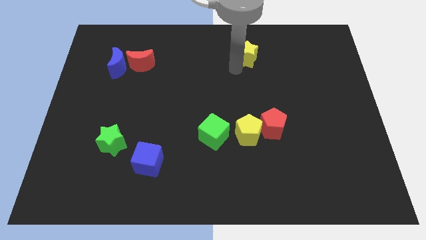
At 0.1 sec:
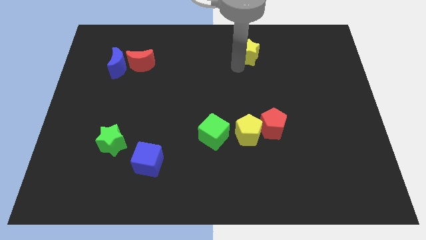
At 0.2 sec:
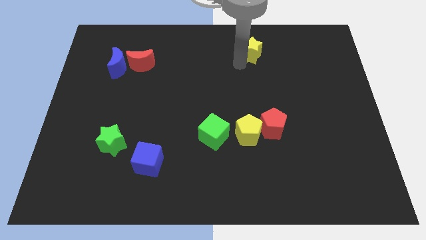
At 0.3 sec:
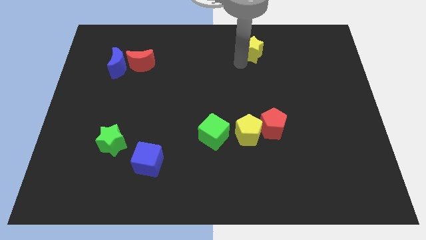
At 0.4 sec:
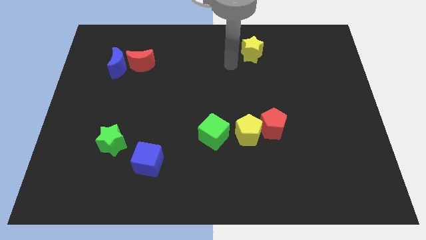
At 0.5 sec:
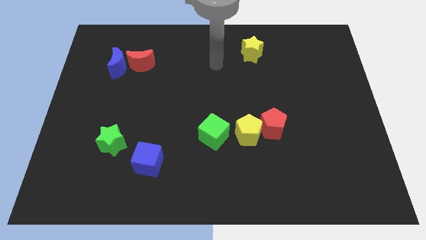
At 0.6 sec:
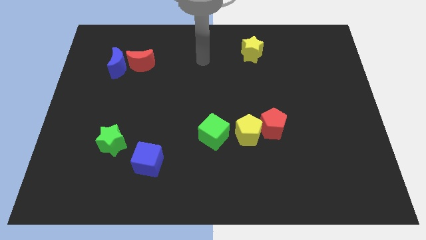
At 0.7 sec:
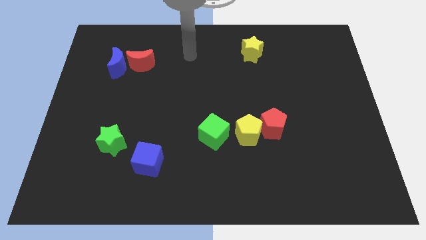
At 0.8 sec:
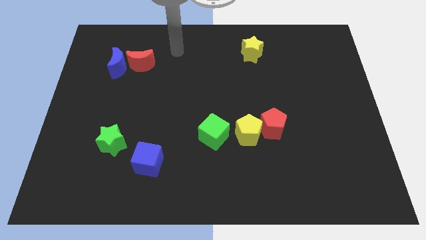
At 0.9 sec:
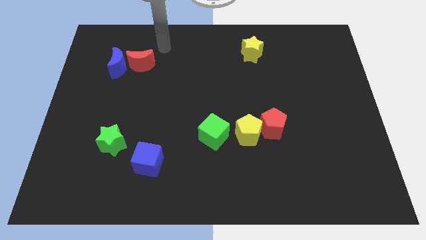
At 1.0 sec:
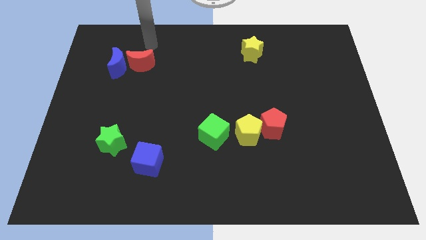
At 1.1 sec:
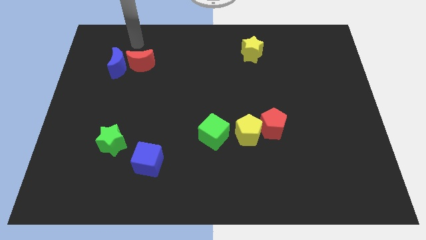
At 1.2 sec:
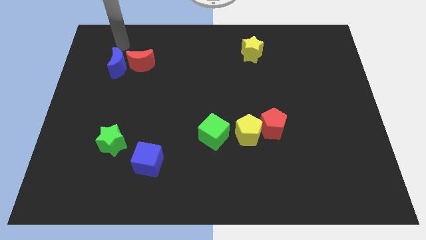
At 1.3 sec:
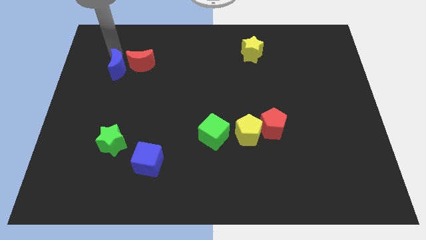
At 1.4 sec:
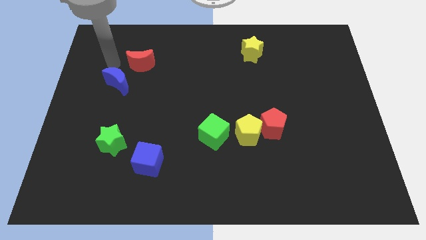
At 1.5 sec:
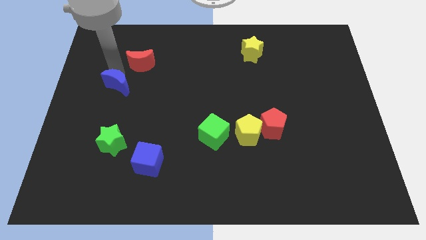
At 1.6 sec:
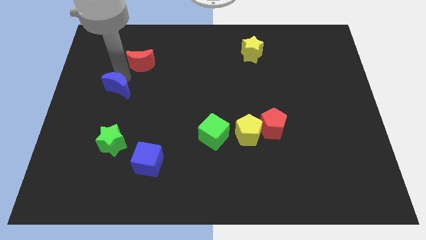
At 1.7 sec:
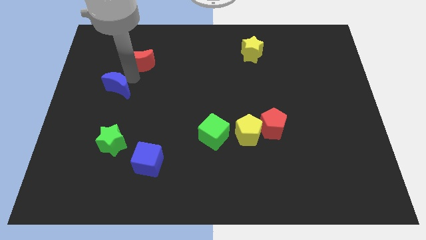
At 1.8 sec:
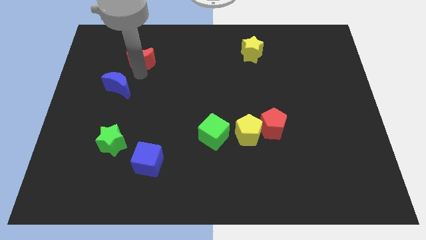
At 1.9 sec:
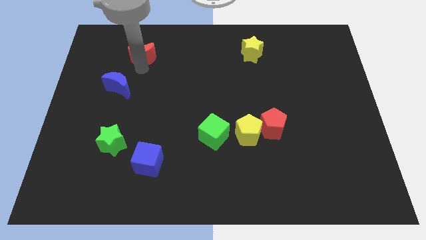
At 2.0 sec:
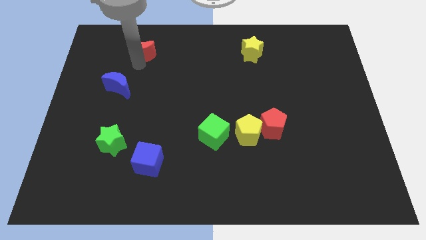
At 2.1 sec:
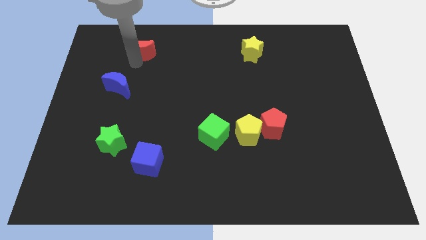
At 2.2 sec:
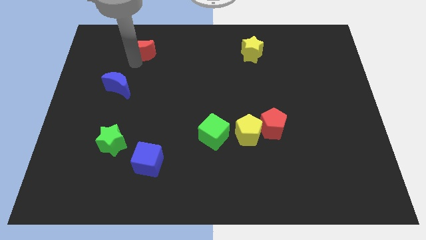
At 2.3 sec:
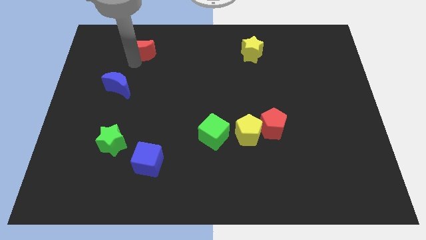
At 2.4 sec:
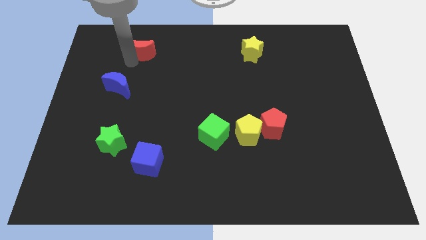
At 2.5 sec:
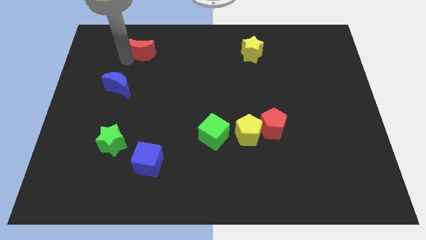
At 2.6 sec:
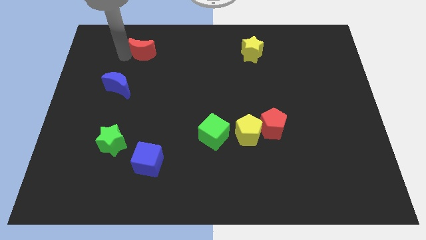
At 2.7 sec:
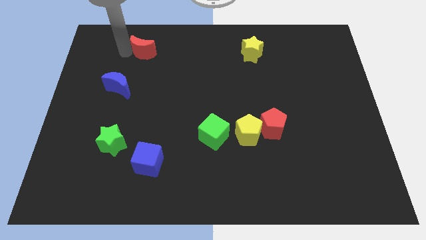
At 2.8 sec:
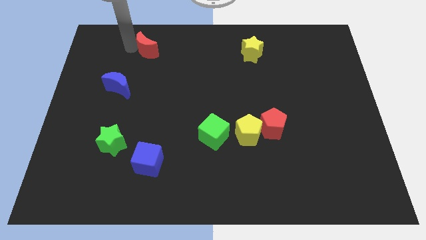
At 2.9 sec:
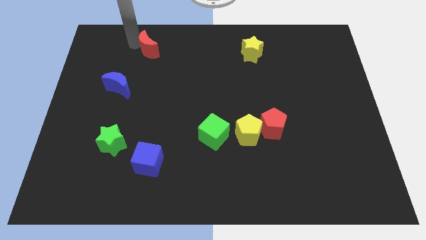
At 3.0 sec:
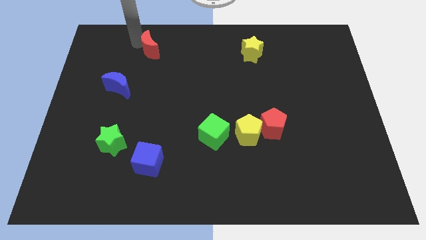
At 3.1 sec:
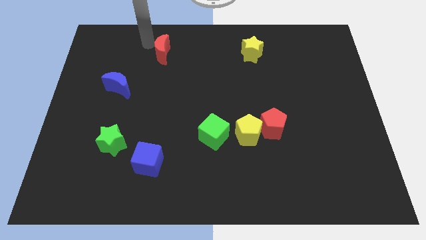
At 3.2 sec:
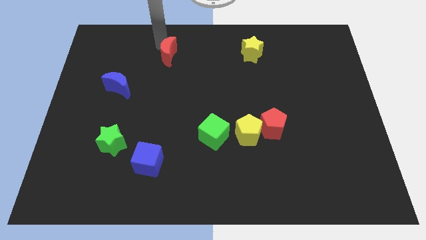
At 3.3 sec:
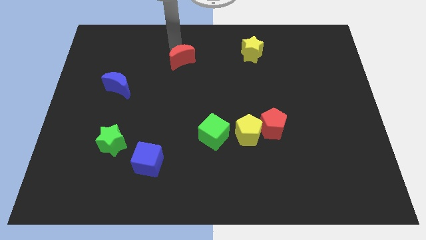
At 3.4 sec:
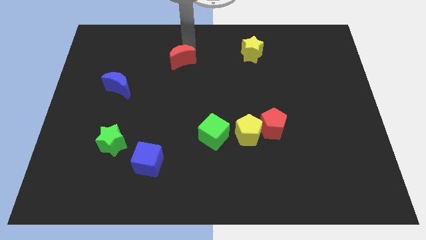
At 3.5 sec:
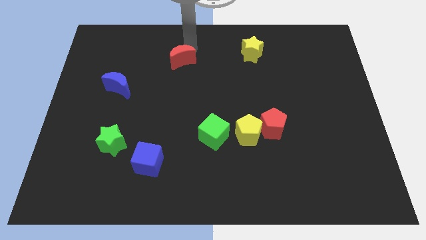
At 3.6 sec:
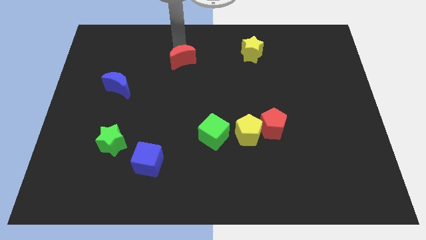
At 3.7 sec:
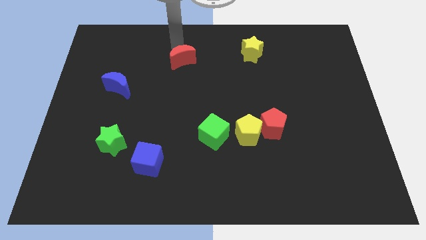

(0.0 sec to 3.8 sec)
drag the red moon away from the blue moon

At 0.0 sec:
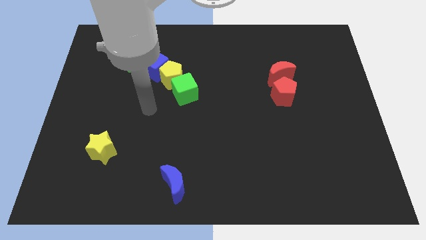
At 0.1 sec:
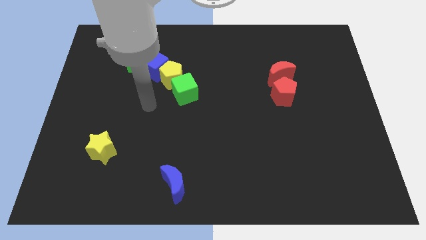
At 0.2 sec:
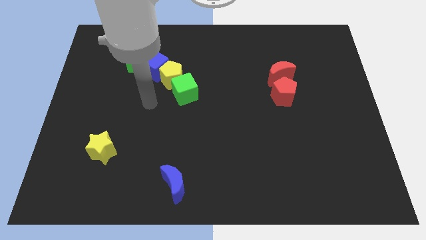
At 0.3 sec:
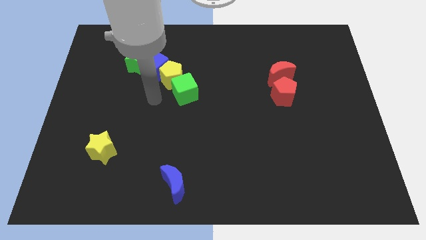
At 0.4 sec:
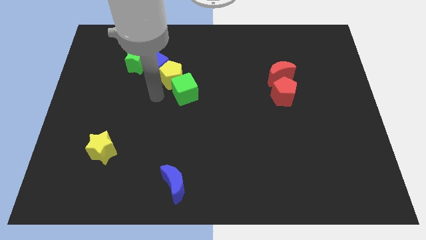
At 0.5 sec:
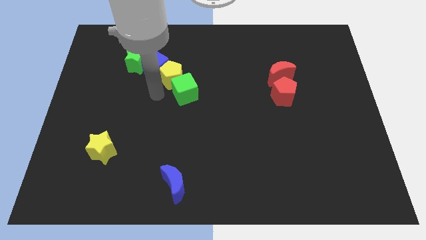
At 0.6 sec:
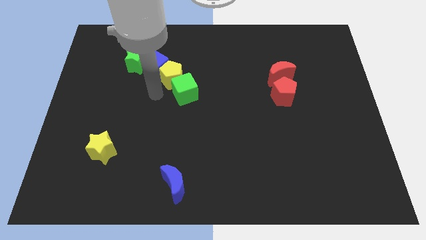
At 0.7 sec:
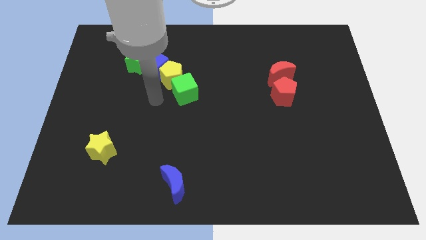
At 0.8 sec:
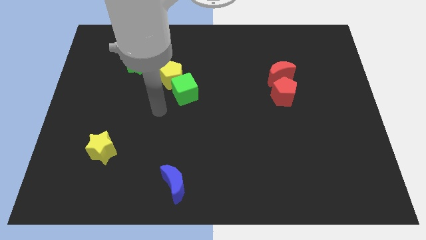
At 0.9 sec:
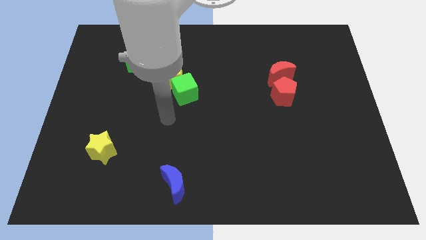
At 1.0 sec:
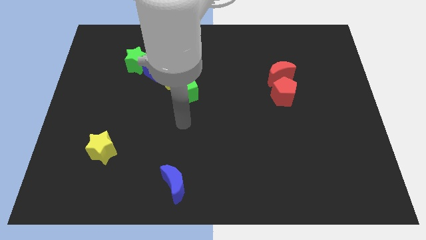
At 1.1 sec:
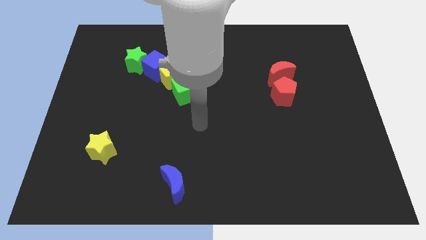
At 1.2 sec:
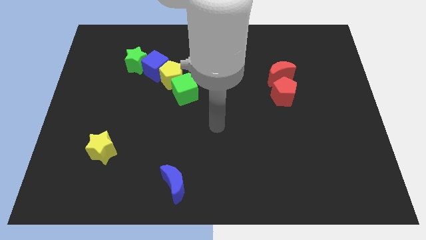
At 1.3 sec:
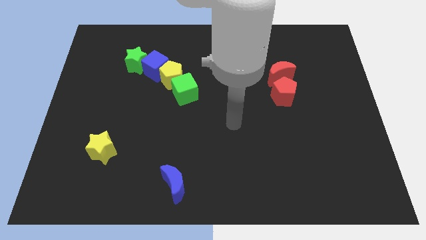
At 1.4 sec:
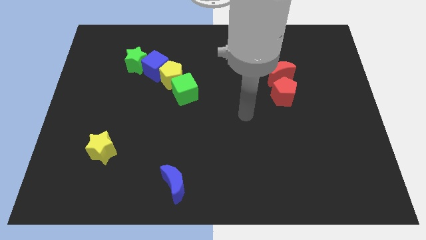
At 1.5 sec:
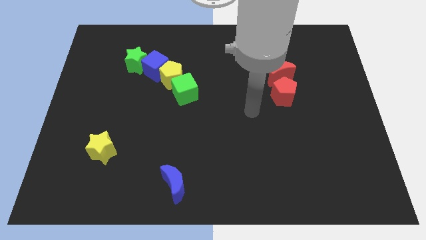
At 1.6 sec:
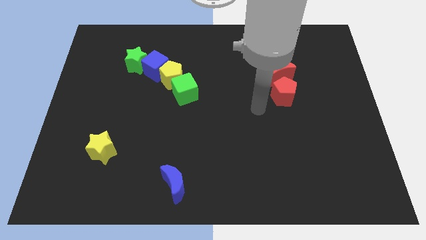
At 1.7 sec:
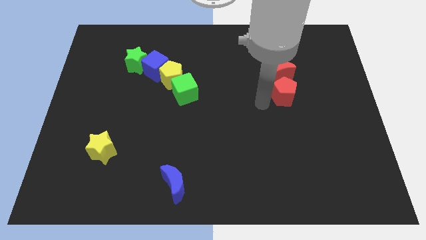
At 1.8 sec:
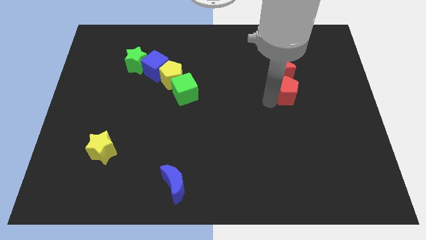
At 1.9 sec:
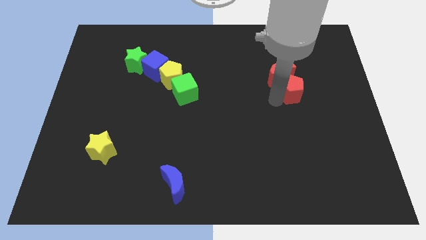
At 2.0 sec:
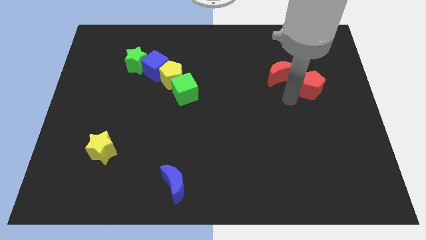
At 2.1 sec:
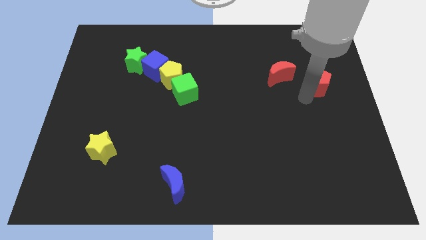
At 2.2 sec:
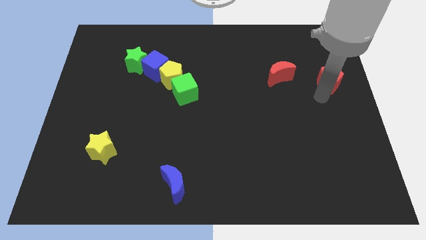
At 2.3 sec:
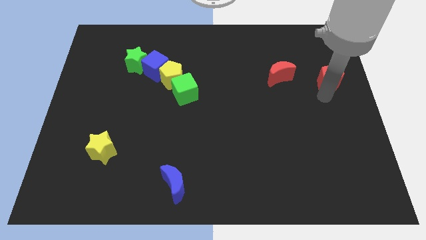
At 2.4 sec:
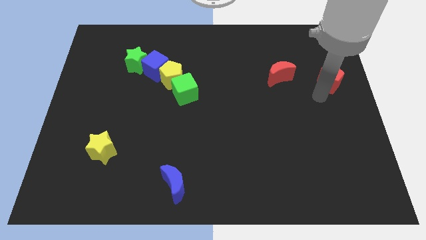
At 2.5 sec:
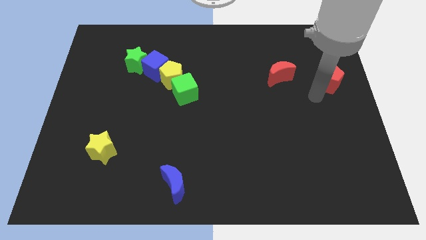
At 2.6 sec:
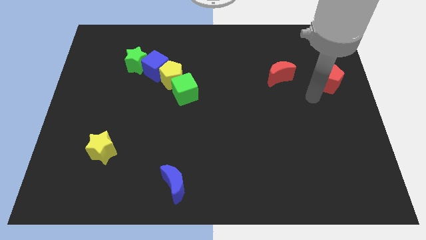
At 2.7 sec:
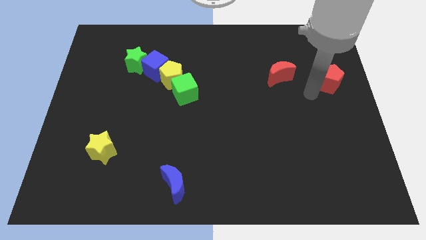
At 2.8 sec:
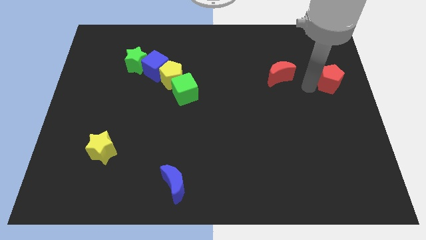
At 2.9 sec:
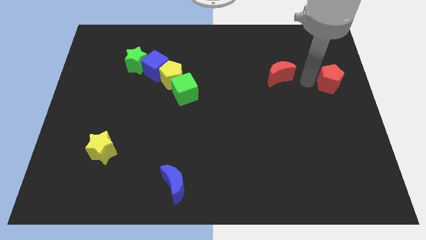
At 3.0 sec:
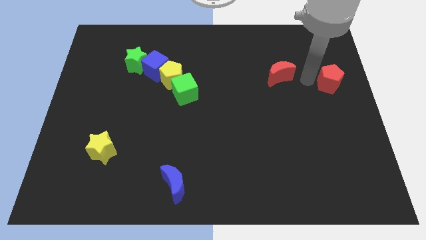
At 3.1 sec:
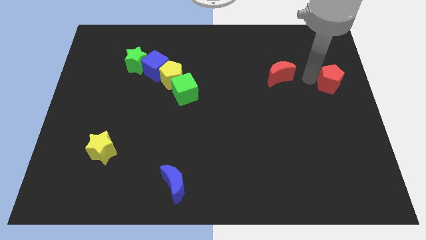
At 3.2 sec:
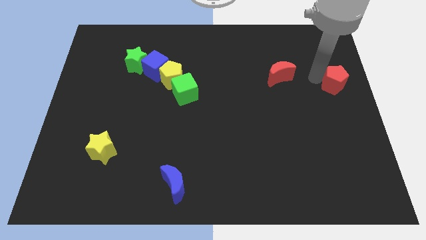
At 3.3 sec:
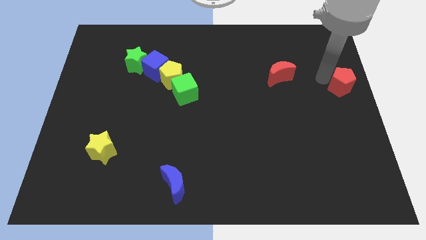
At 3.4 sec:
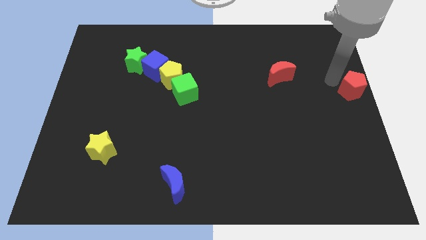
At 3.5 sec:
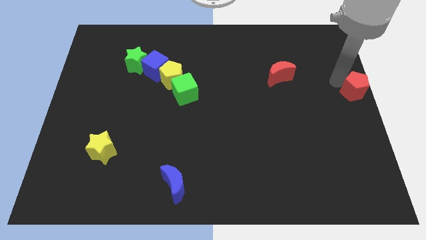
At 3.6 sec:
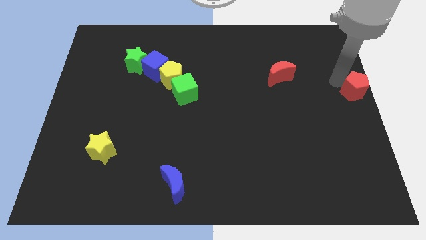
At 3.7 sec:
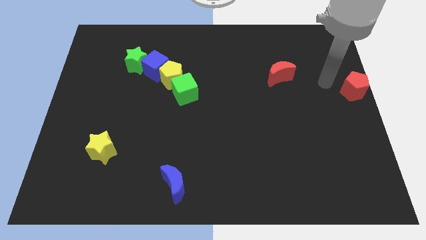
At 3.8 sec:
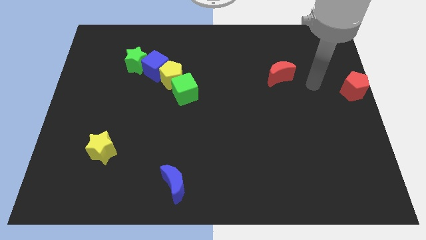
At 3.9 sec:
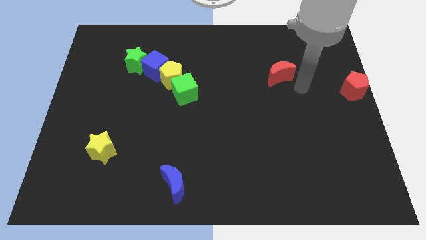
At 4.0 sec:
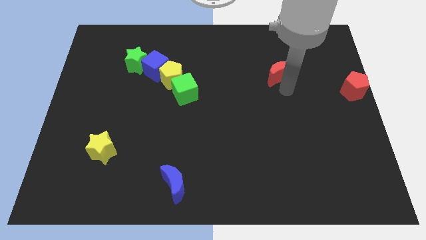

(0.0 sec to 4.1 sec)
move the red pentagon to the center right side of the board

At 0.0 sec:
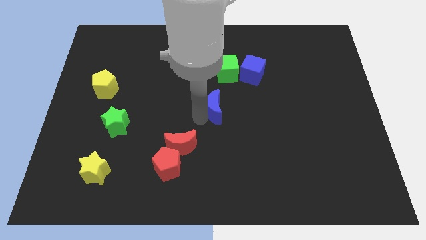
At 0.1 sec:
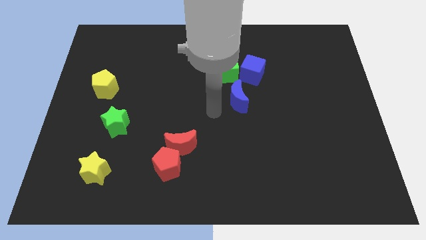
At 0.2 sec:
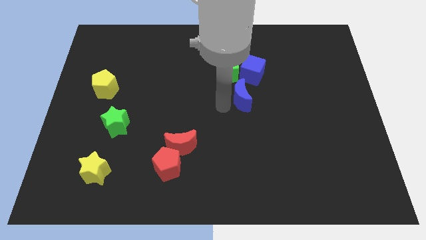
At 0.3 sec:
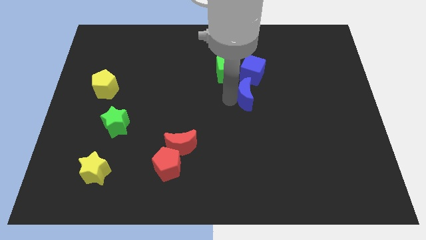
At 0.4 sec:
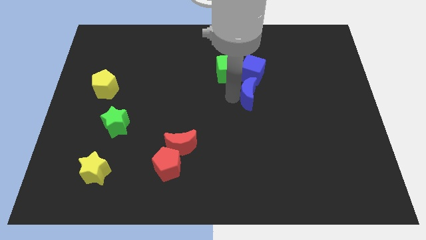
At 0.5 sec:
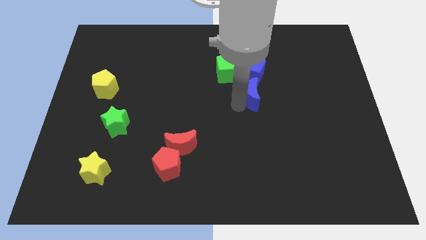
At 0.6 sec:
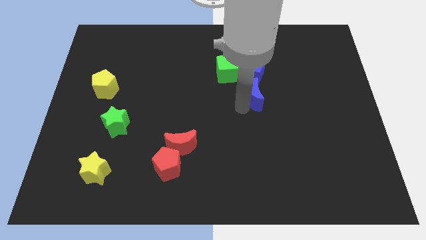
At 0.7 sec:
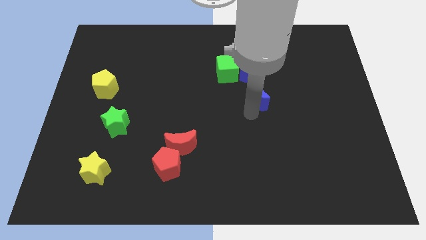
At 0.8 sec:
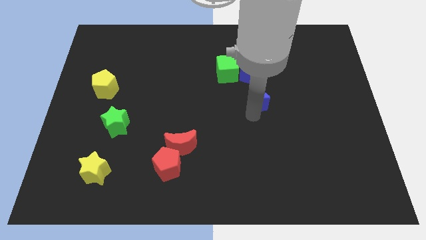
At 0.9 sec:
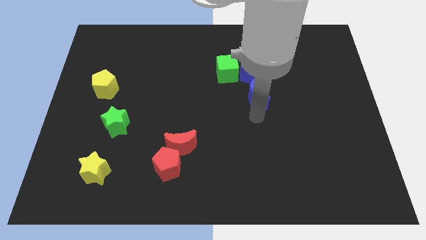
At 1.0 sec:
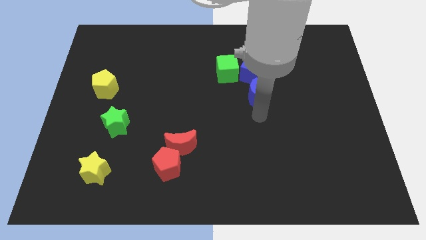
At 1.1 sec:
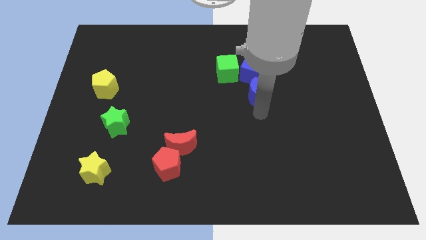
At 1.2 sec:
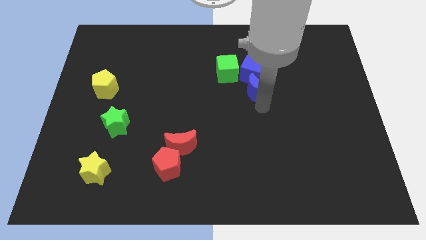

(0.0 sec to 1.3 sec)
place the blue moon vertically below the blue cube
